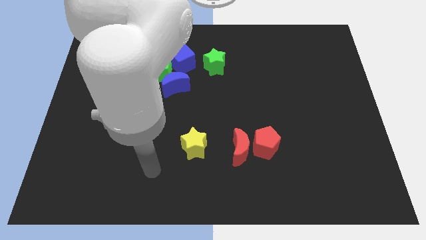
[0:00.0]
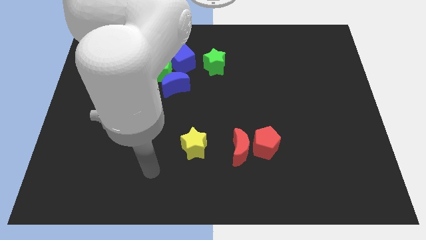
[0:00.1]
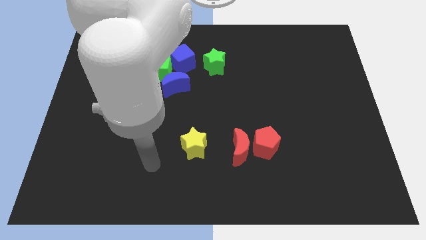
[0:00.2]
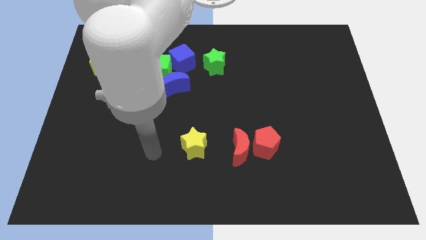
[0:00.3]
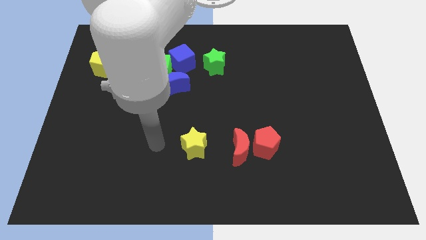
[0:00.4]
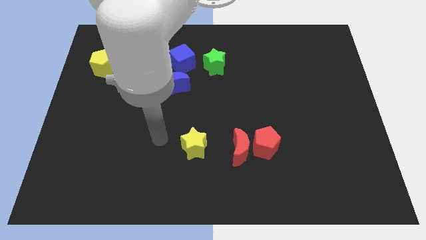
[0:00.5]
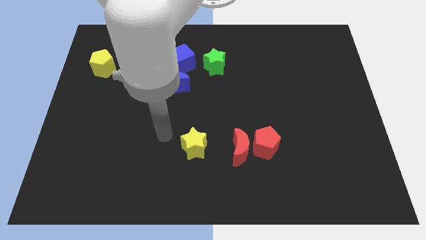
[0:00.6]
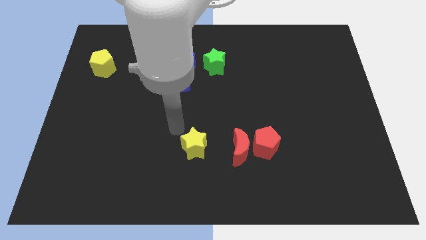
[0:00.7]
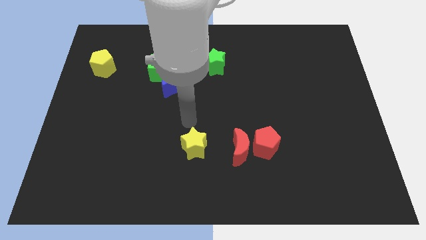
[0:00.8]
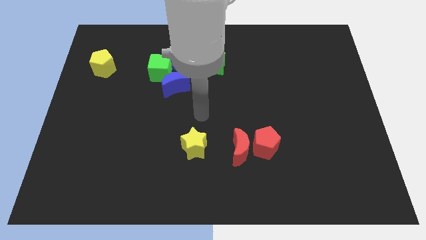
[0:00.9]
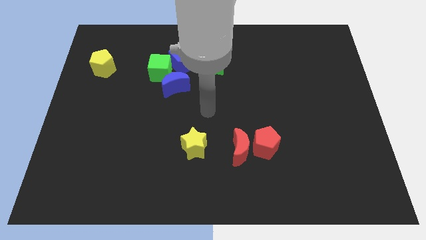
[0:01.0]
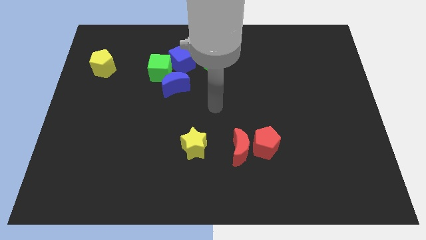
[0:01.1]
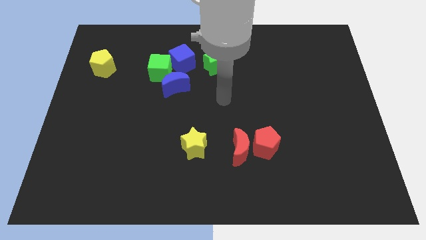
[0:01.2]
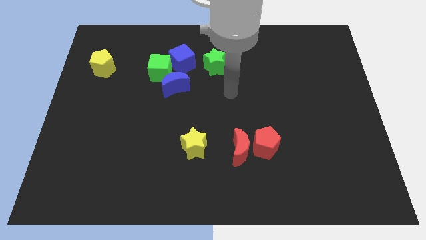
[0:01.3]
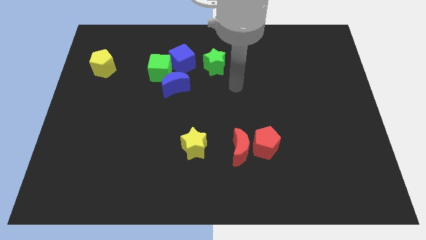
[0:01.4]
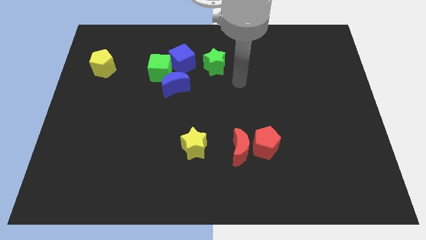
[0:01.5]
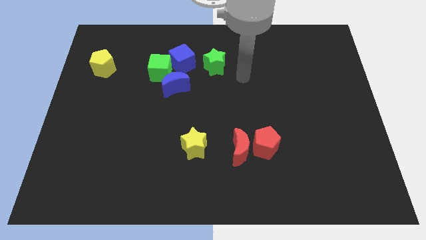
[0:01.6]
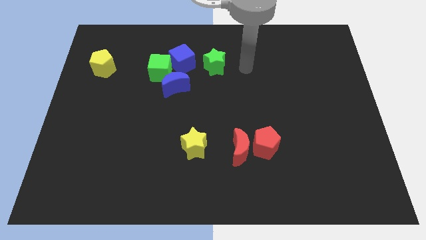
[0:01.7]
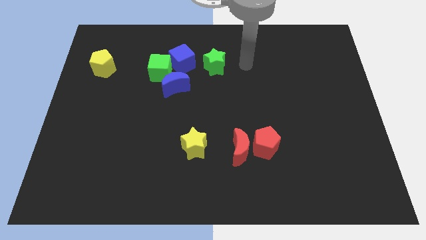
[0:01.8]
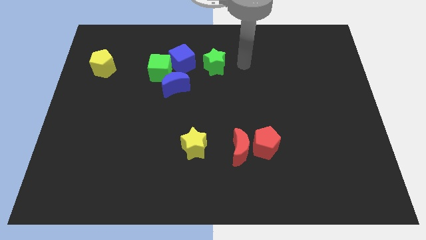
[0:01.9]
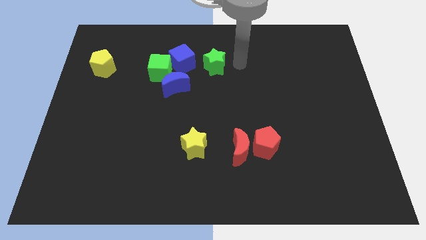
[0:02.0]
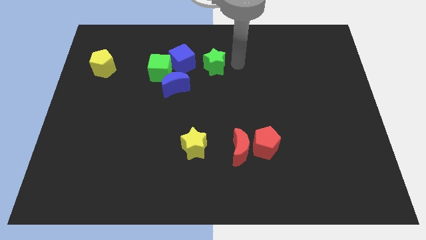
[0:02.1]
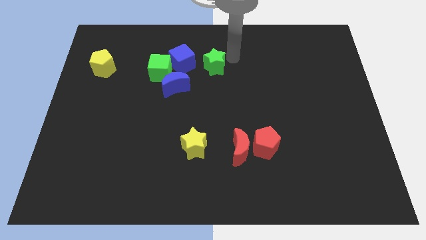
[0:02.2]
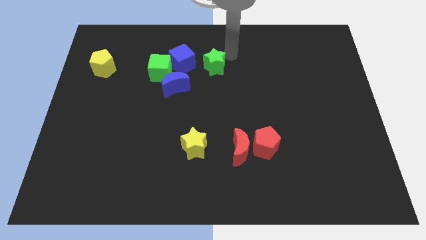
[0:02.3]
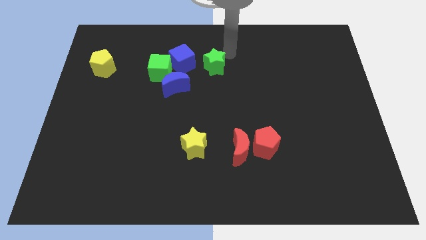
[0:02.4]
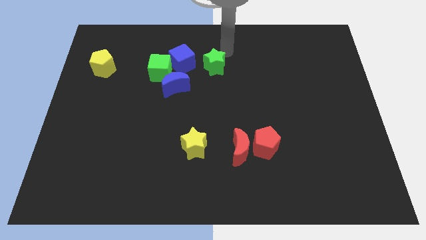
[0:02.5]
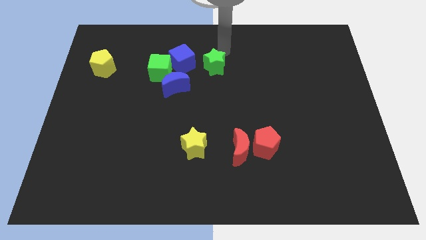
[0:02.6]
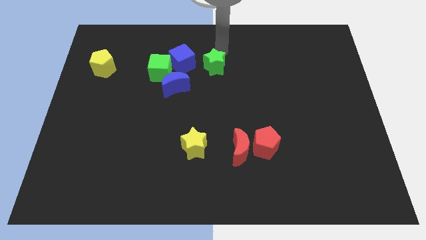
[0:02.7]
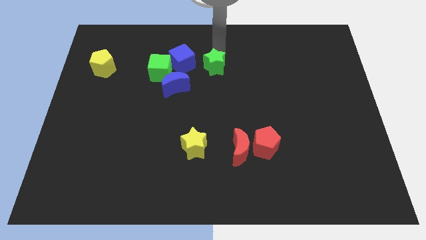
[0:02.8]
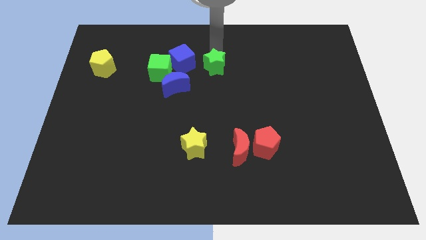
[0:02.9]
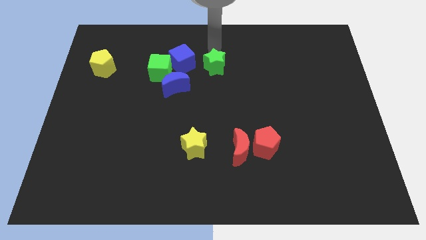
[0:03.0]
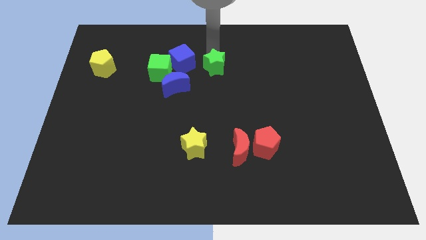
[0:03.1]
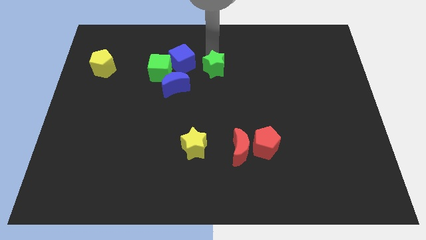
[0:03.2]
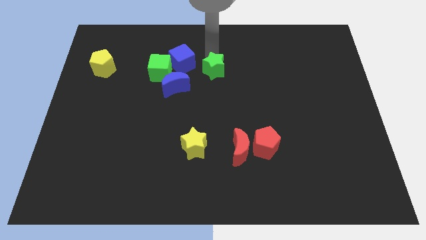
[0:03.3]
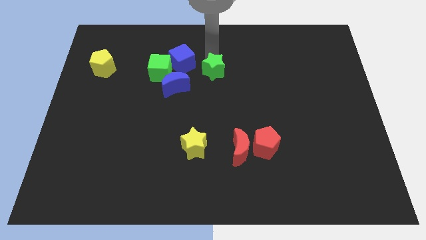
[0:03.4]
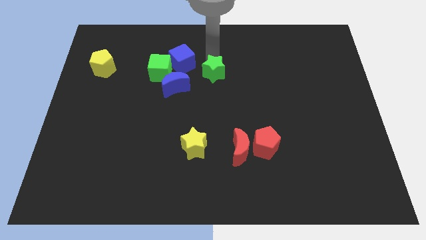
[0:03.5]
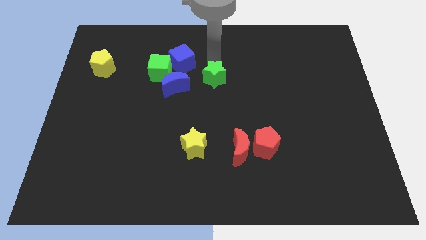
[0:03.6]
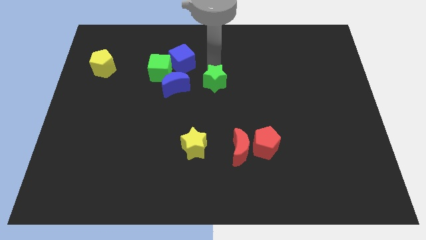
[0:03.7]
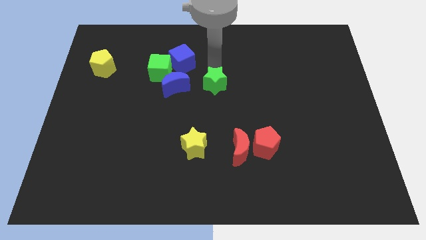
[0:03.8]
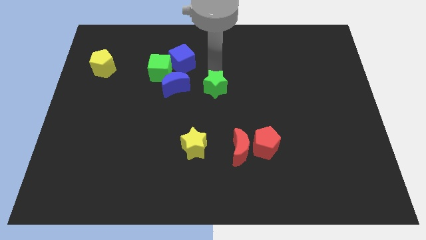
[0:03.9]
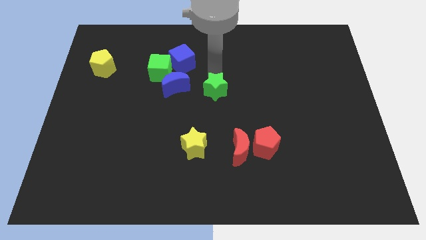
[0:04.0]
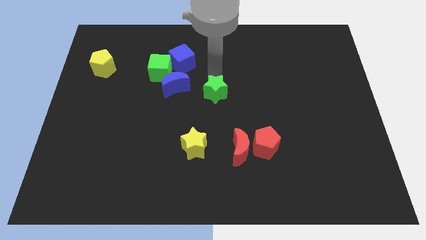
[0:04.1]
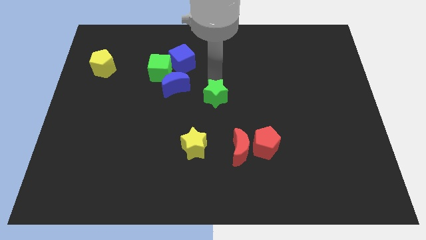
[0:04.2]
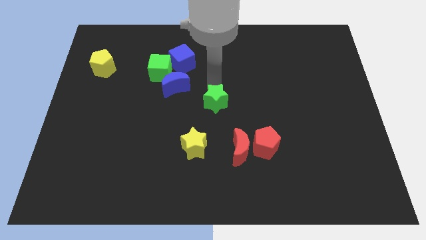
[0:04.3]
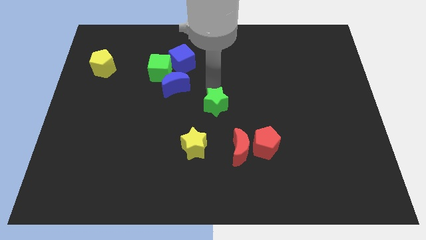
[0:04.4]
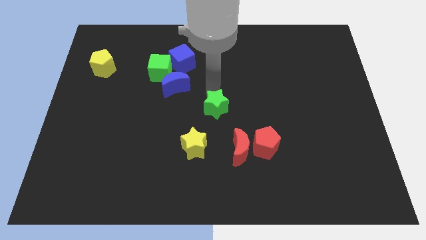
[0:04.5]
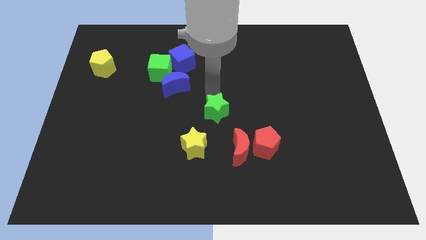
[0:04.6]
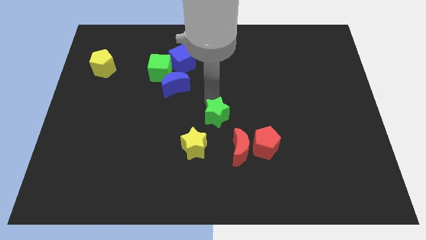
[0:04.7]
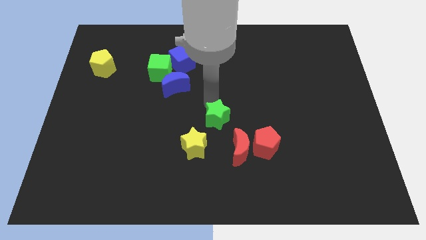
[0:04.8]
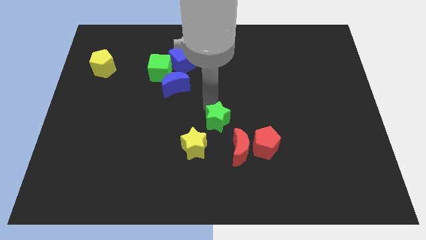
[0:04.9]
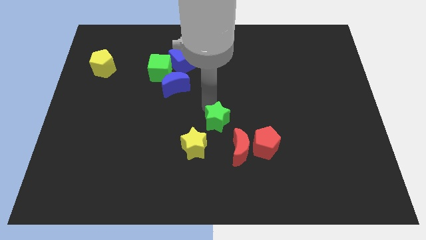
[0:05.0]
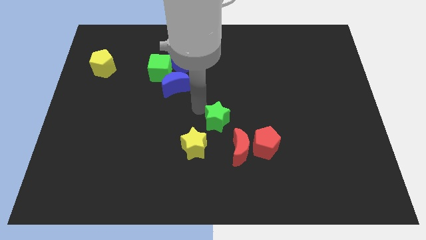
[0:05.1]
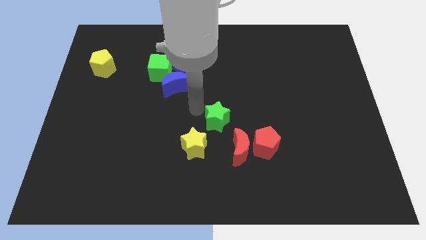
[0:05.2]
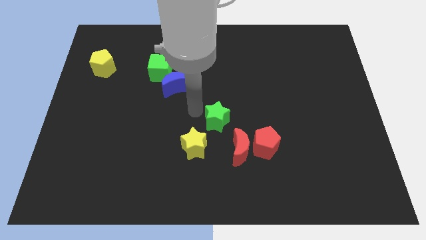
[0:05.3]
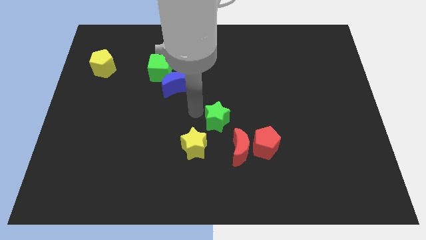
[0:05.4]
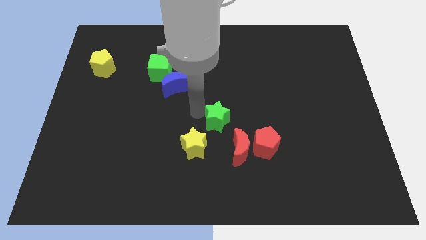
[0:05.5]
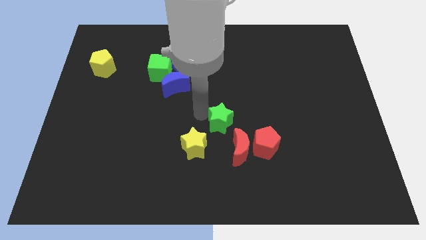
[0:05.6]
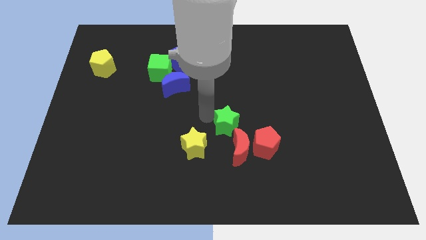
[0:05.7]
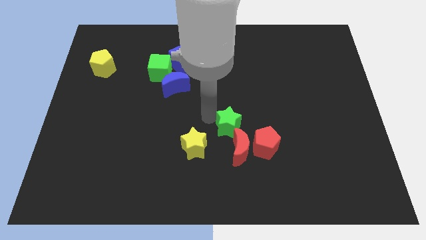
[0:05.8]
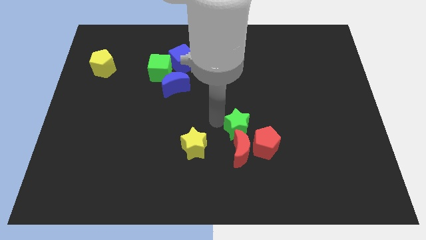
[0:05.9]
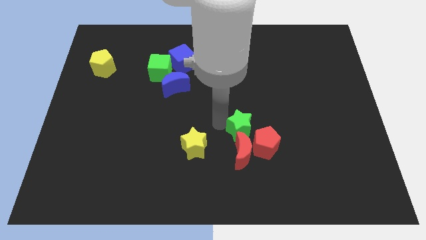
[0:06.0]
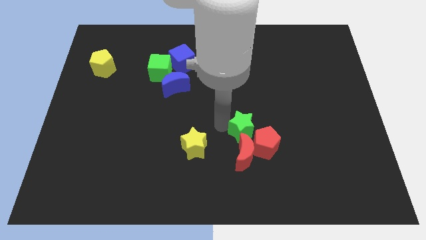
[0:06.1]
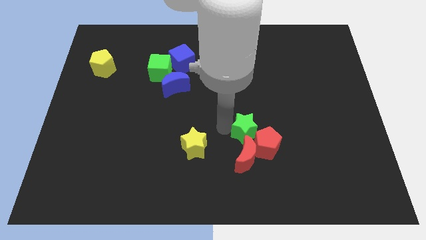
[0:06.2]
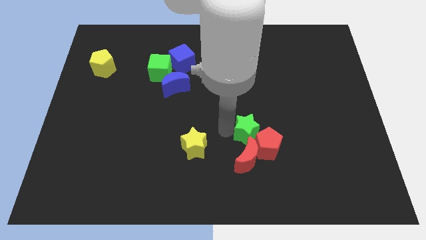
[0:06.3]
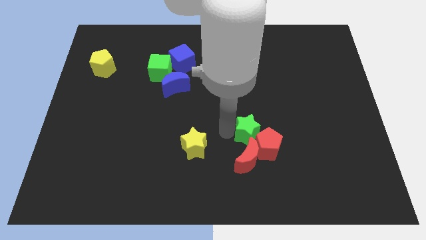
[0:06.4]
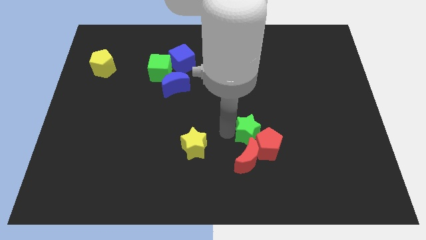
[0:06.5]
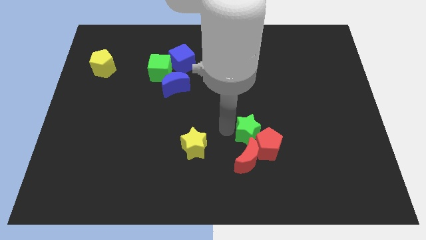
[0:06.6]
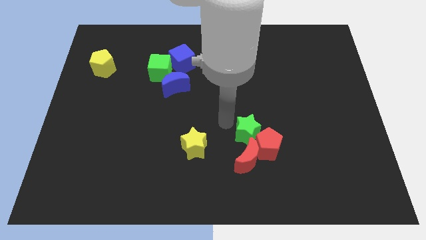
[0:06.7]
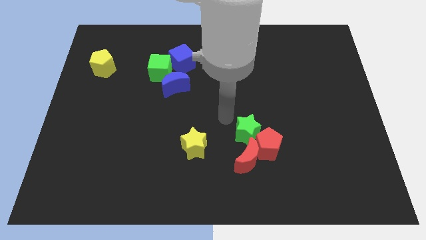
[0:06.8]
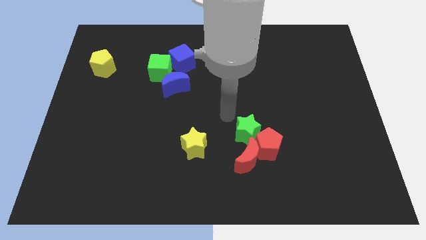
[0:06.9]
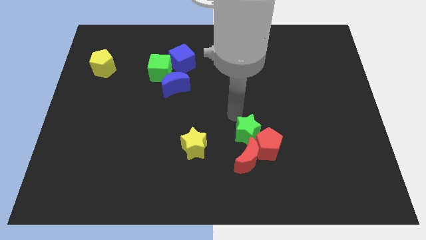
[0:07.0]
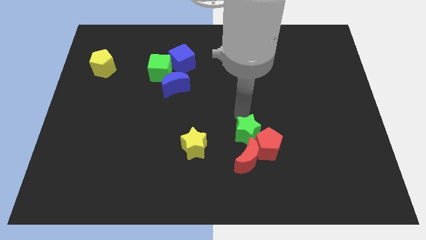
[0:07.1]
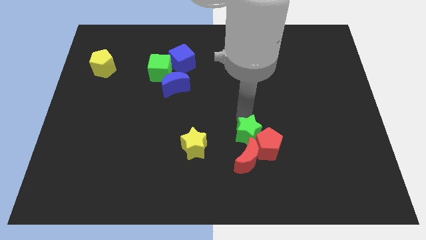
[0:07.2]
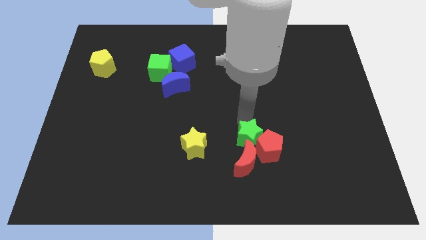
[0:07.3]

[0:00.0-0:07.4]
move the green star next to the red moon

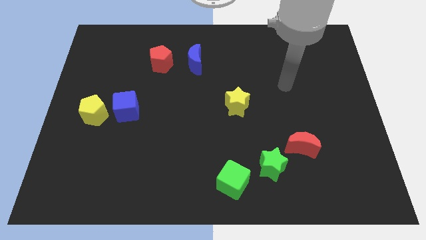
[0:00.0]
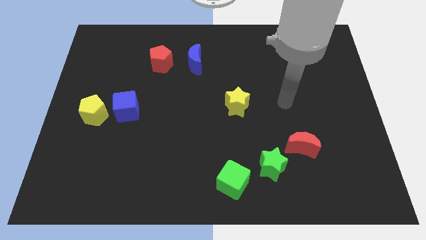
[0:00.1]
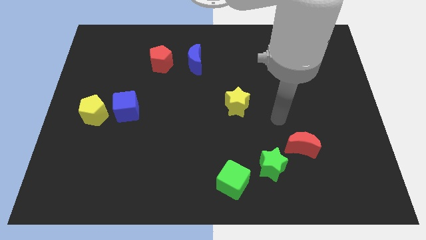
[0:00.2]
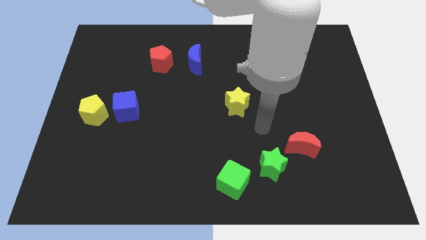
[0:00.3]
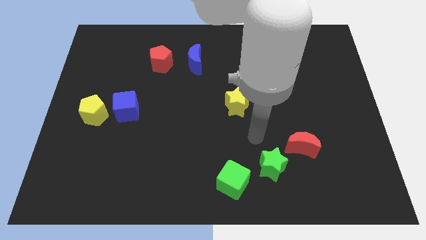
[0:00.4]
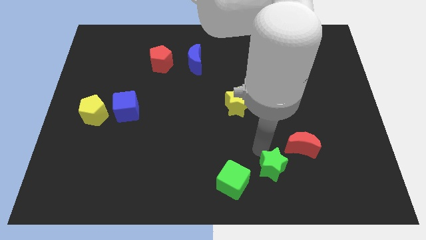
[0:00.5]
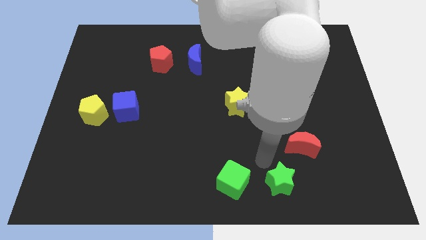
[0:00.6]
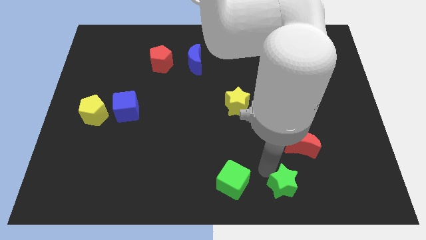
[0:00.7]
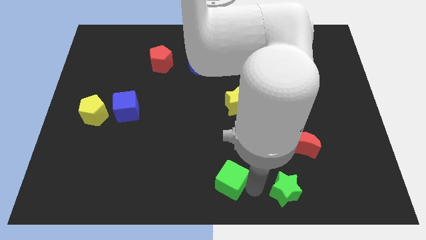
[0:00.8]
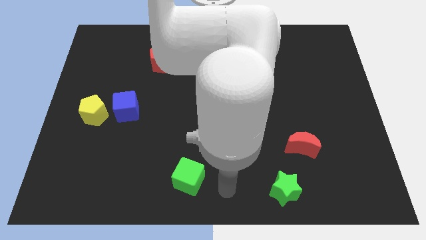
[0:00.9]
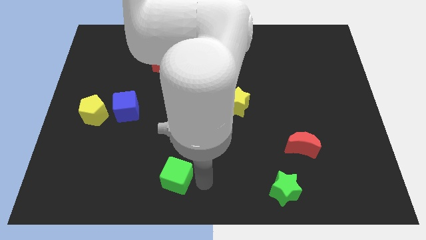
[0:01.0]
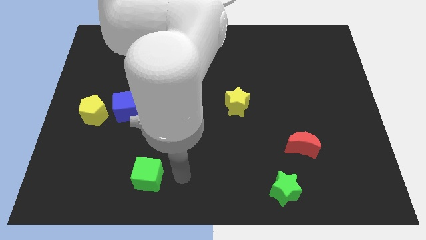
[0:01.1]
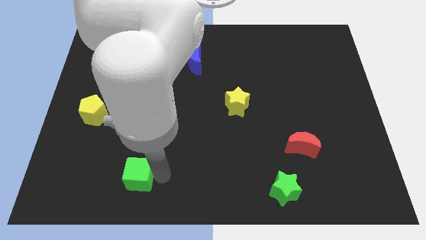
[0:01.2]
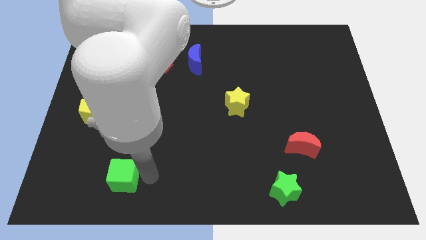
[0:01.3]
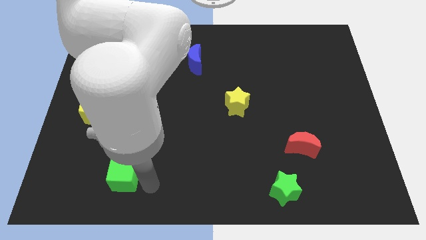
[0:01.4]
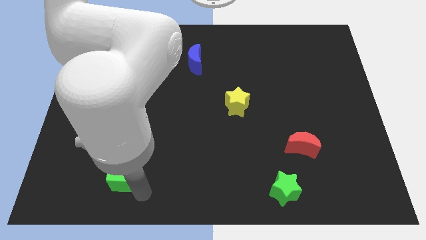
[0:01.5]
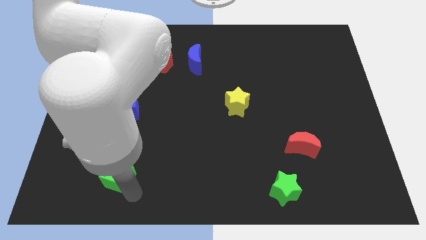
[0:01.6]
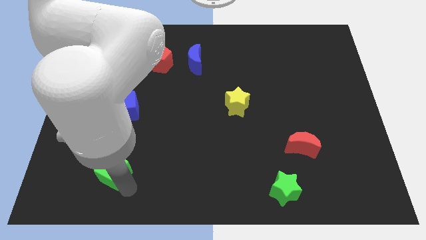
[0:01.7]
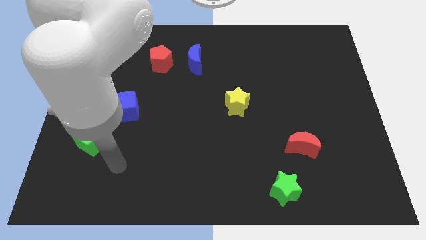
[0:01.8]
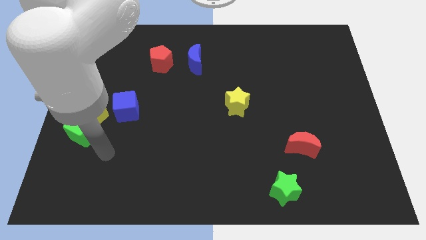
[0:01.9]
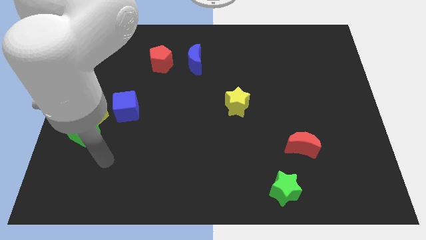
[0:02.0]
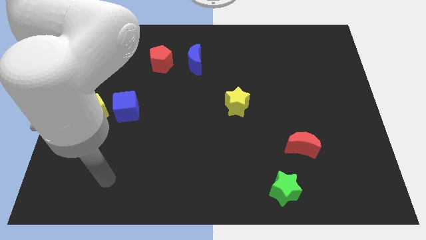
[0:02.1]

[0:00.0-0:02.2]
put the green cube next to the yellow pentagon
